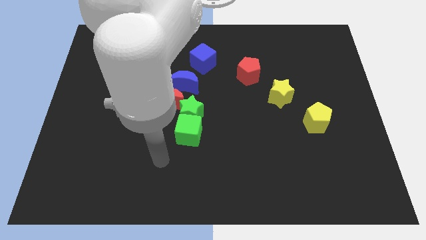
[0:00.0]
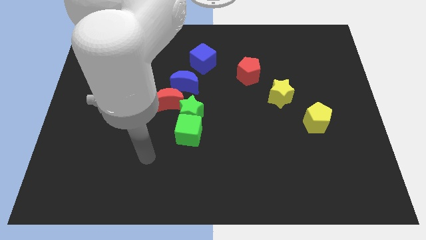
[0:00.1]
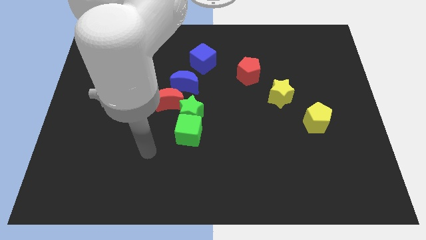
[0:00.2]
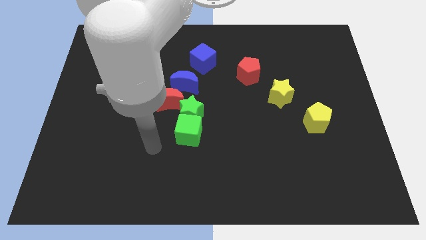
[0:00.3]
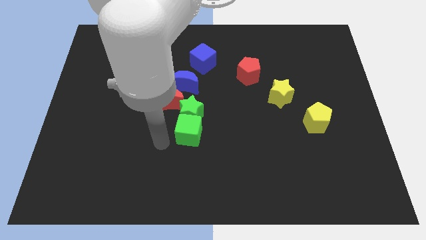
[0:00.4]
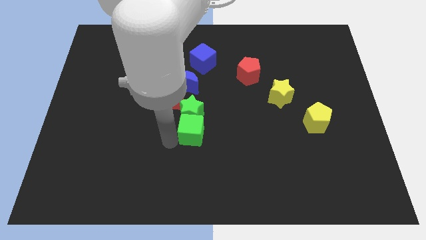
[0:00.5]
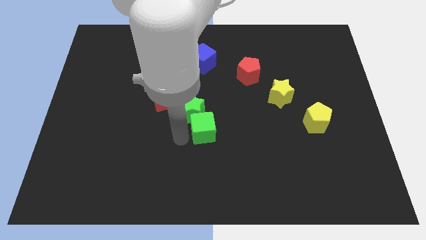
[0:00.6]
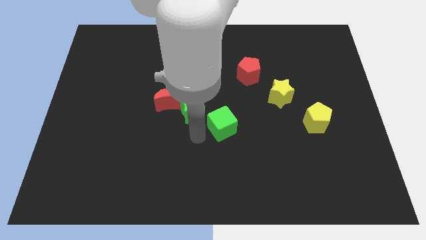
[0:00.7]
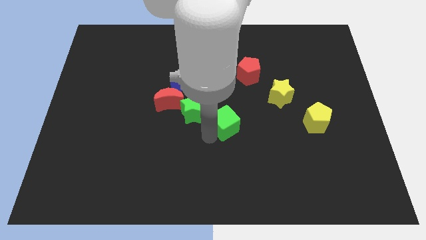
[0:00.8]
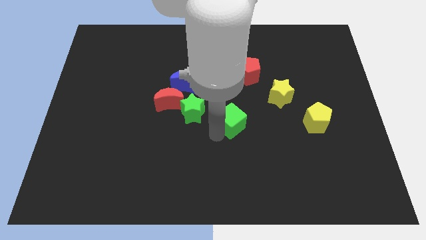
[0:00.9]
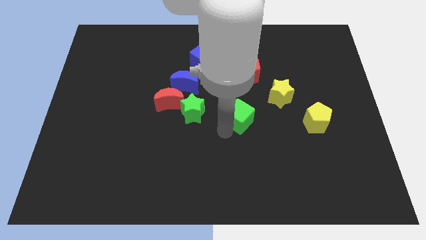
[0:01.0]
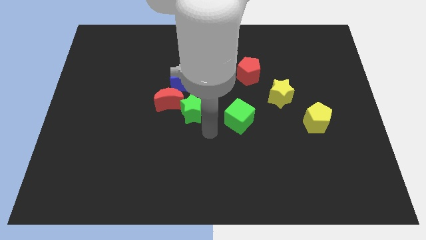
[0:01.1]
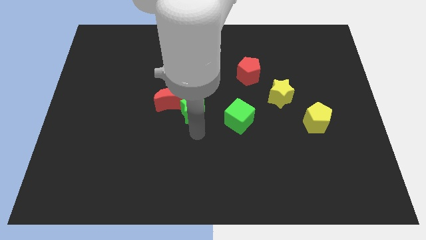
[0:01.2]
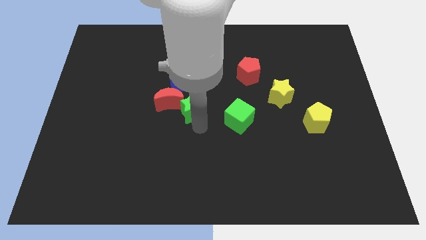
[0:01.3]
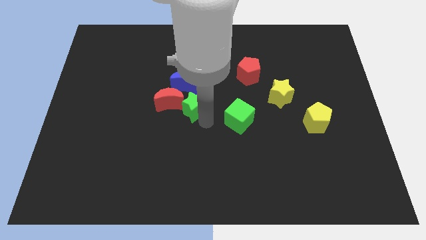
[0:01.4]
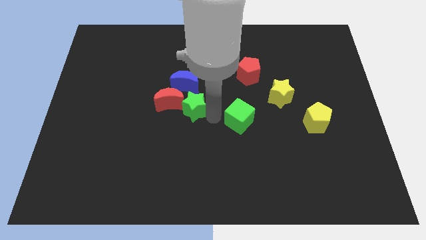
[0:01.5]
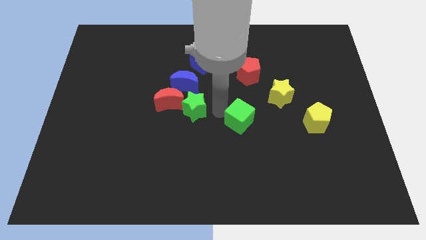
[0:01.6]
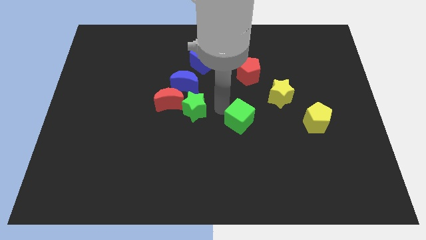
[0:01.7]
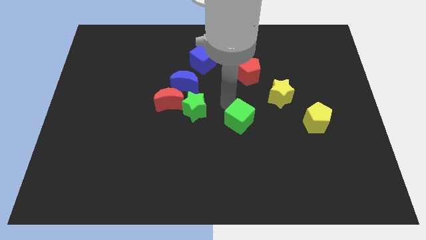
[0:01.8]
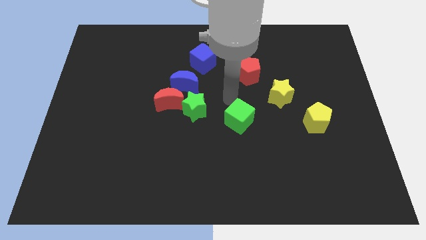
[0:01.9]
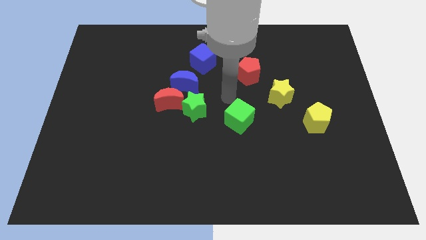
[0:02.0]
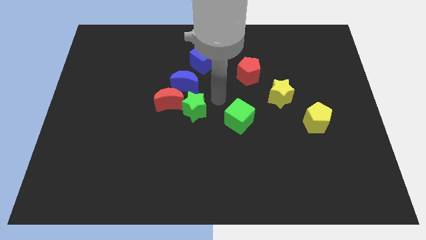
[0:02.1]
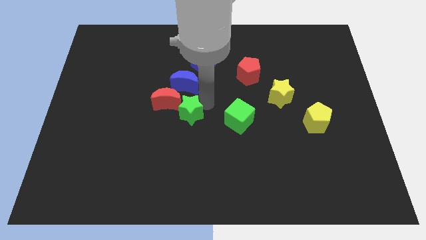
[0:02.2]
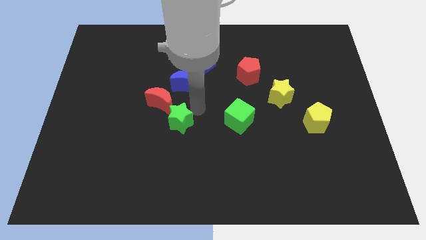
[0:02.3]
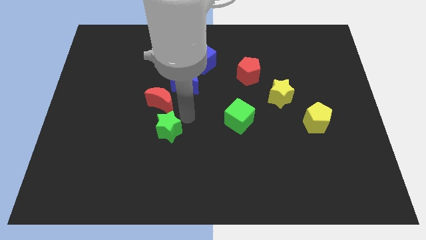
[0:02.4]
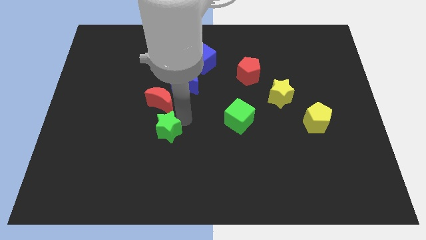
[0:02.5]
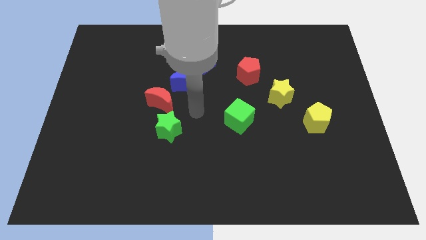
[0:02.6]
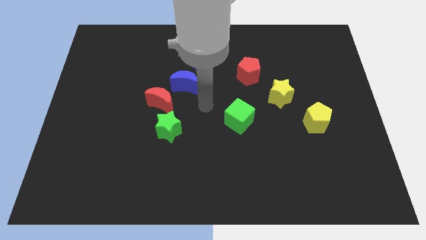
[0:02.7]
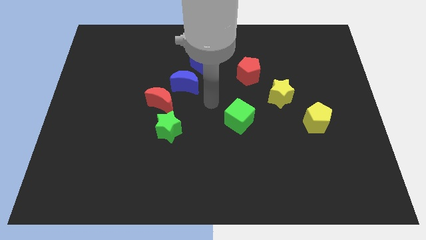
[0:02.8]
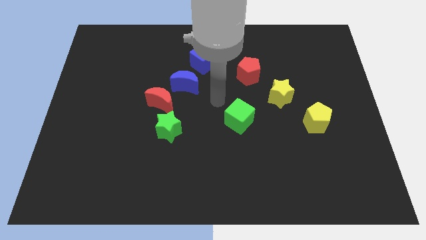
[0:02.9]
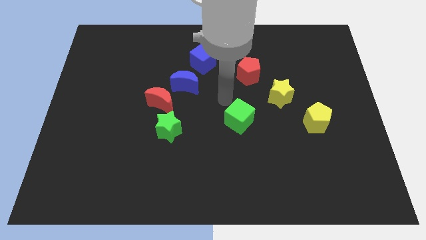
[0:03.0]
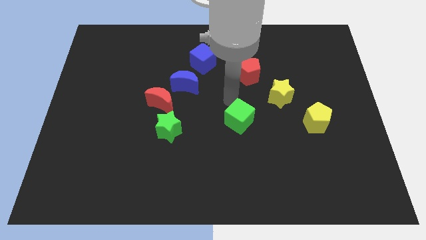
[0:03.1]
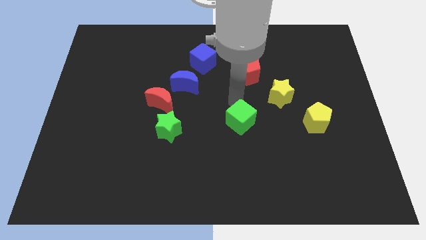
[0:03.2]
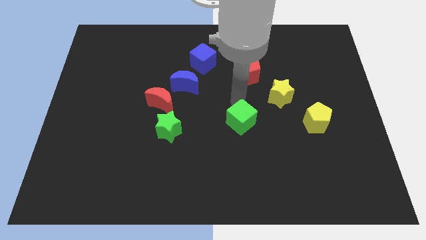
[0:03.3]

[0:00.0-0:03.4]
separate green cube from green star

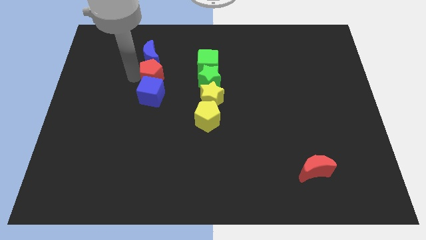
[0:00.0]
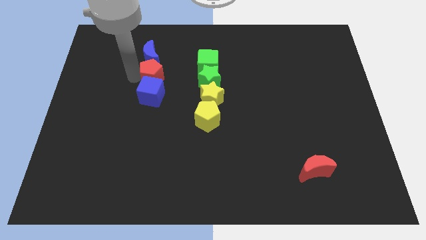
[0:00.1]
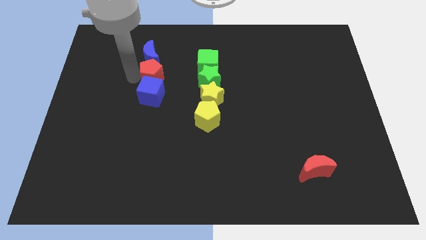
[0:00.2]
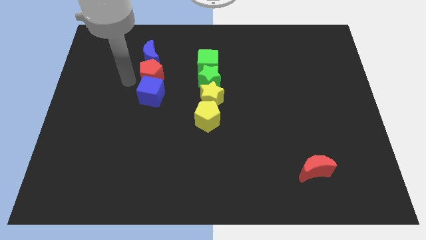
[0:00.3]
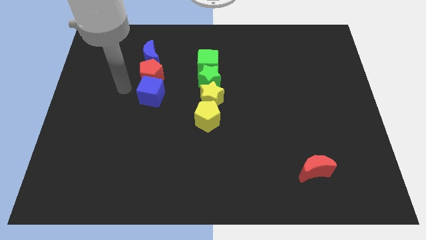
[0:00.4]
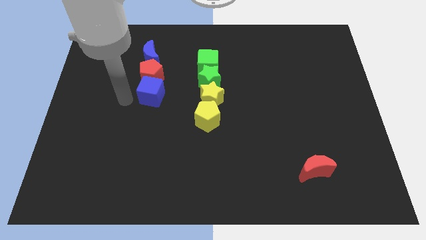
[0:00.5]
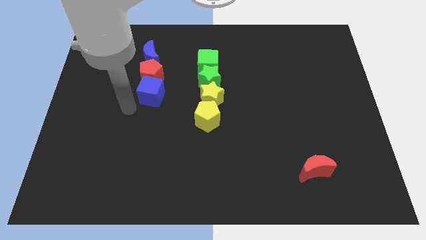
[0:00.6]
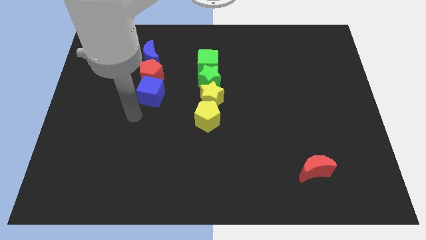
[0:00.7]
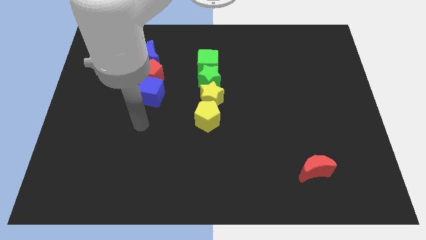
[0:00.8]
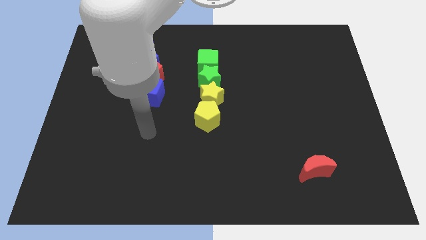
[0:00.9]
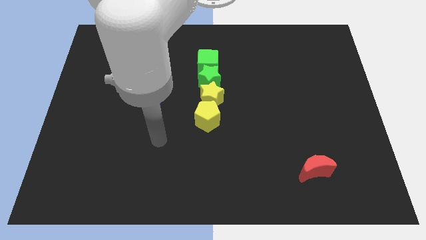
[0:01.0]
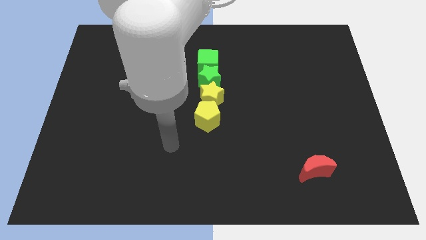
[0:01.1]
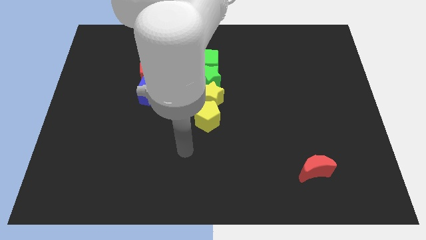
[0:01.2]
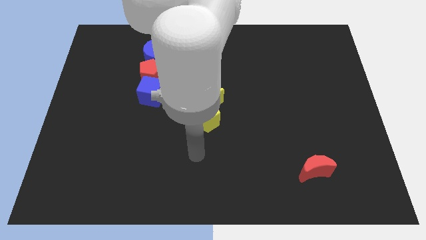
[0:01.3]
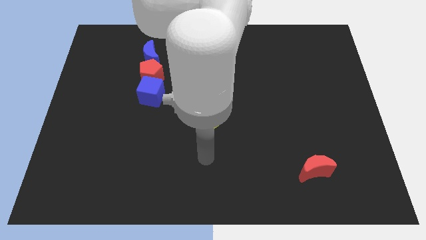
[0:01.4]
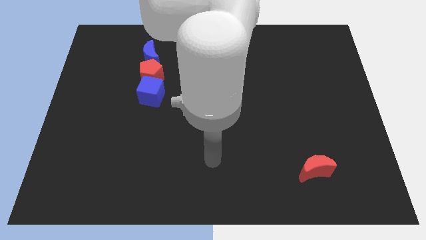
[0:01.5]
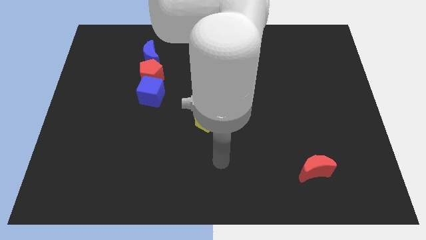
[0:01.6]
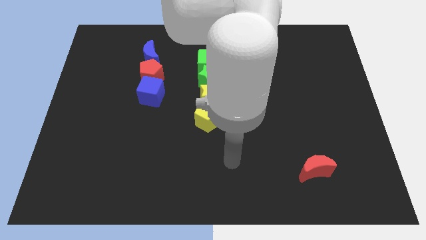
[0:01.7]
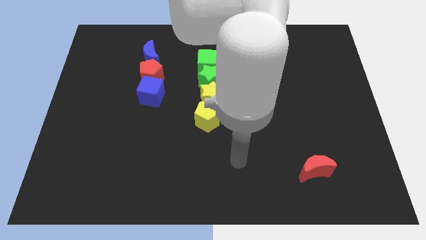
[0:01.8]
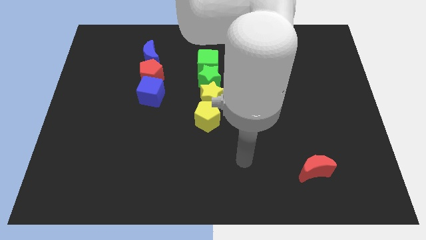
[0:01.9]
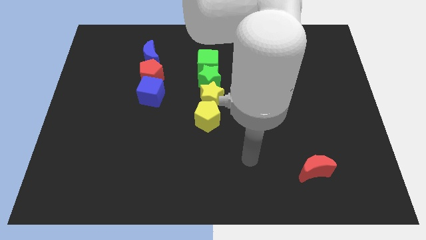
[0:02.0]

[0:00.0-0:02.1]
move the arm to the bottom right of the board

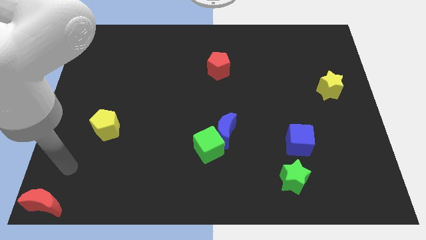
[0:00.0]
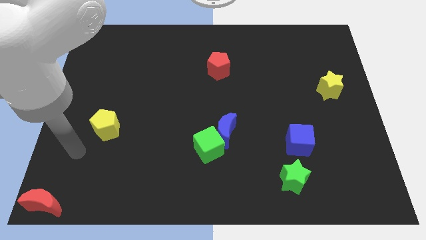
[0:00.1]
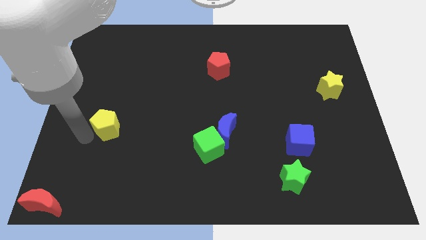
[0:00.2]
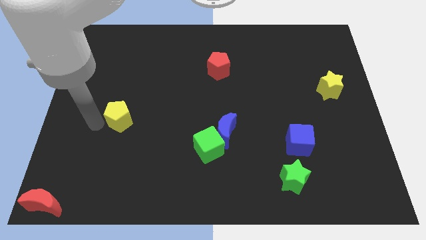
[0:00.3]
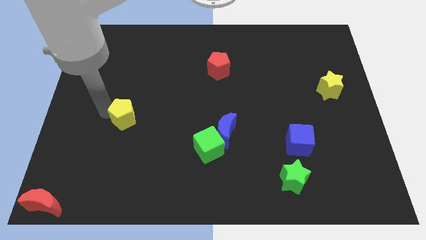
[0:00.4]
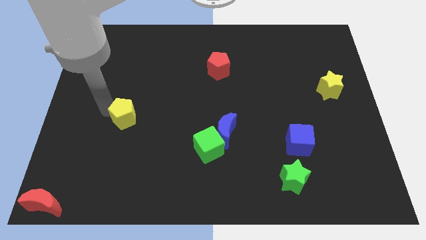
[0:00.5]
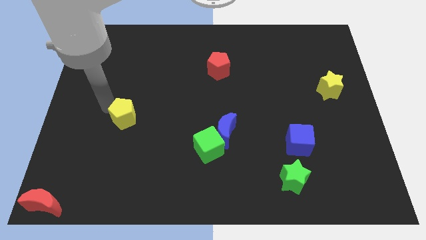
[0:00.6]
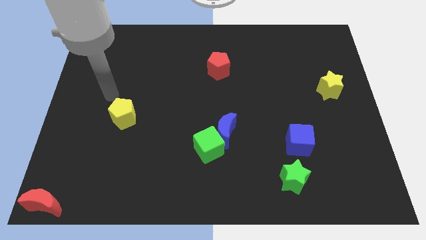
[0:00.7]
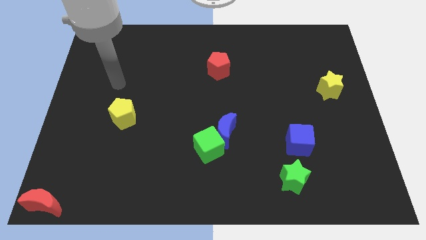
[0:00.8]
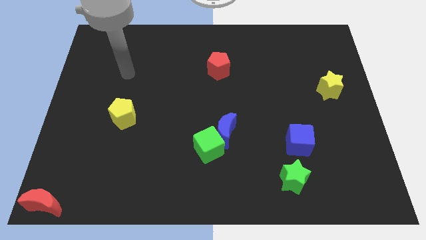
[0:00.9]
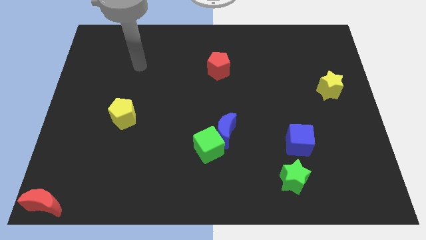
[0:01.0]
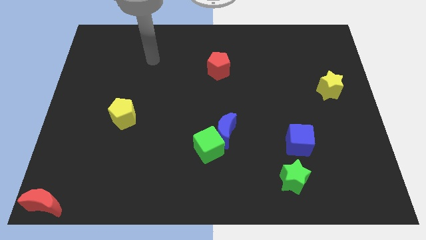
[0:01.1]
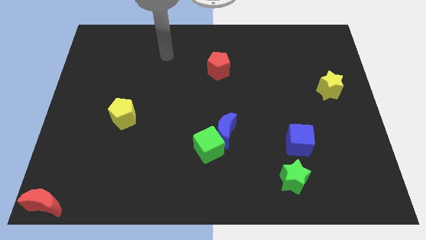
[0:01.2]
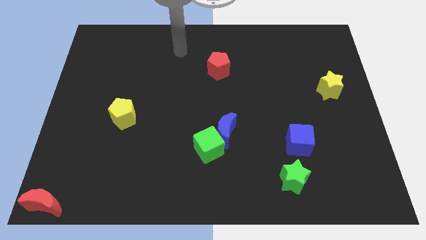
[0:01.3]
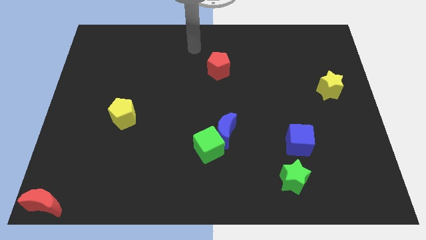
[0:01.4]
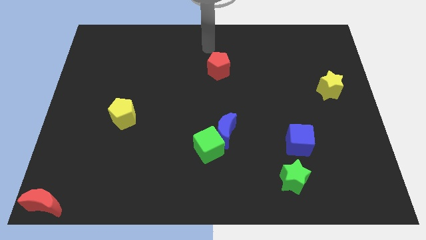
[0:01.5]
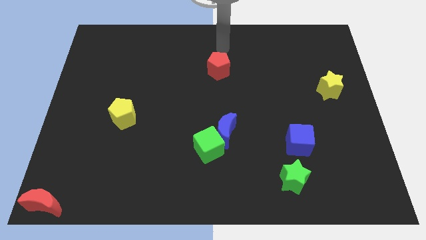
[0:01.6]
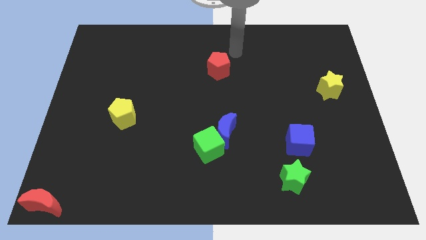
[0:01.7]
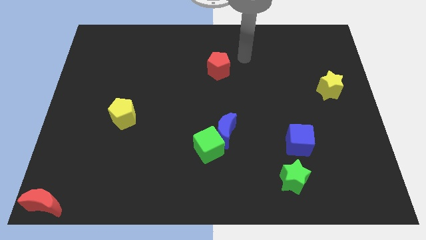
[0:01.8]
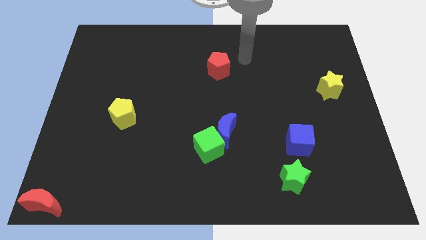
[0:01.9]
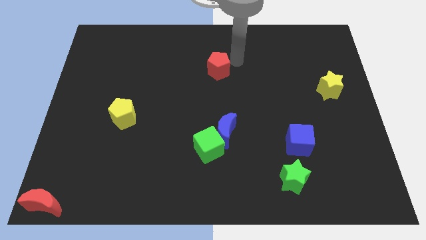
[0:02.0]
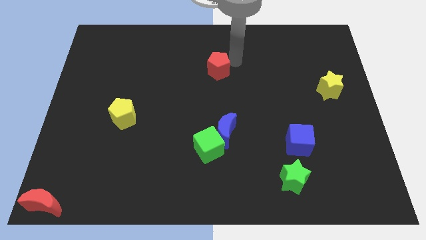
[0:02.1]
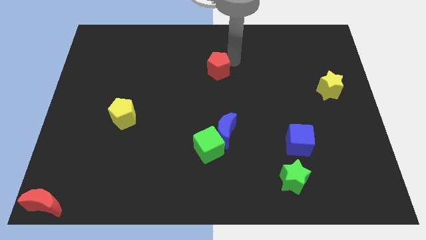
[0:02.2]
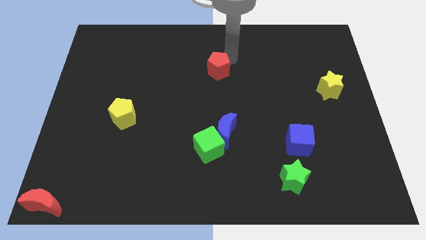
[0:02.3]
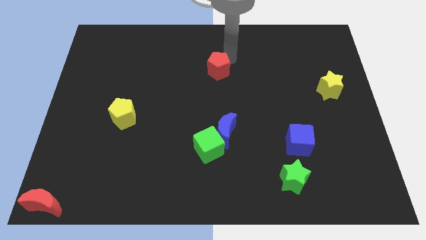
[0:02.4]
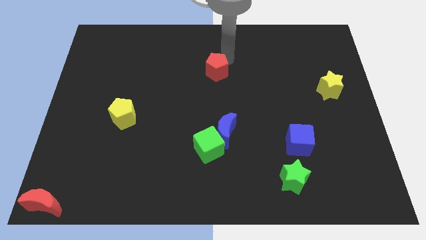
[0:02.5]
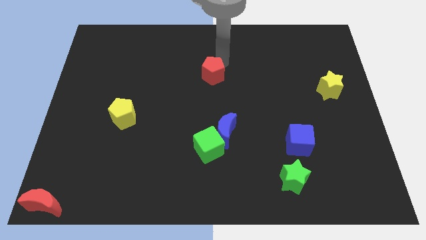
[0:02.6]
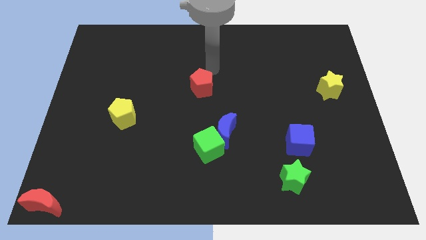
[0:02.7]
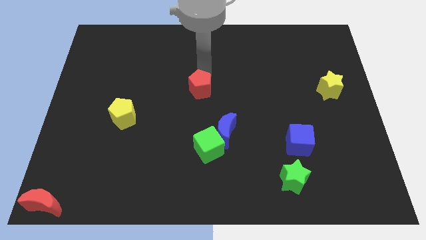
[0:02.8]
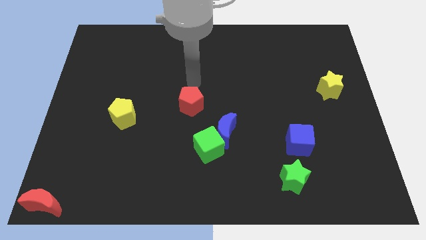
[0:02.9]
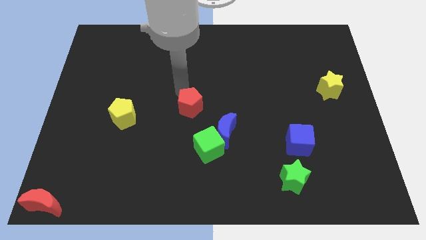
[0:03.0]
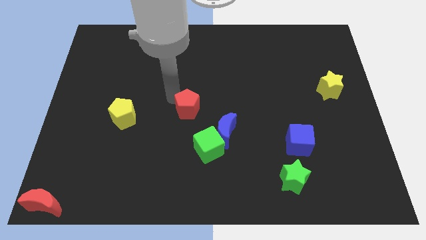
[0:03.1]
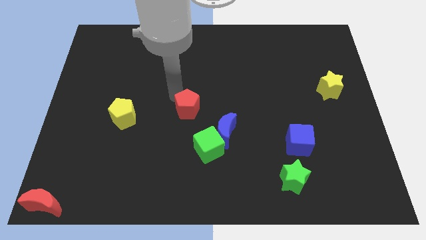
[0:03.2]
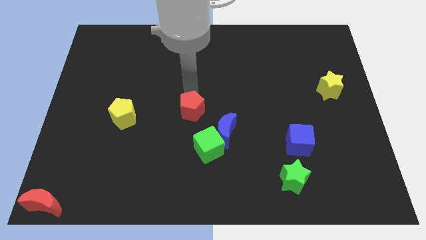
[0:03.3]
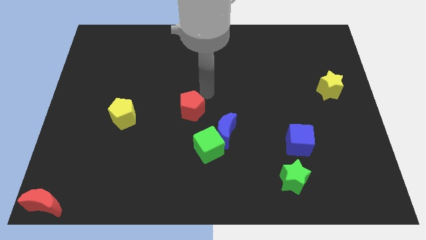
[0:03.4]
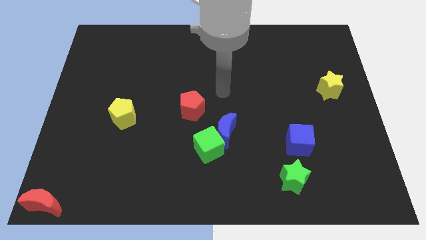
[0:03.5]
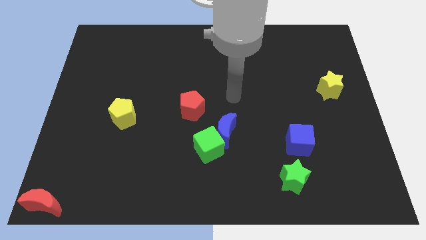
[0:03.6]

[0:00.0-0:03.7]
slide the red pentagon diagonally top left to the green cube
